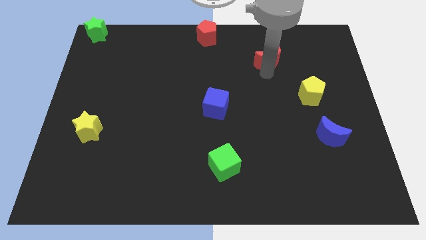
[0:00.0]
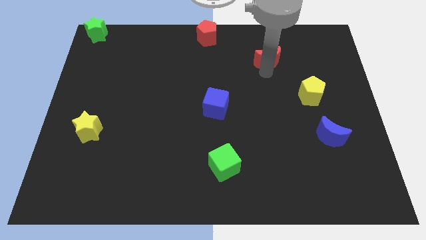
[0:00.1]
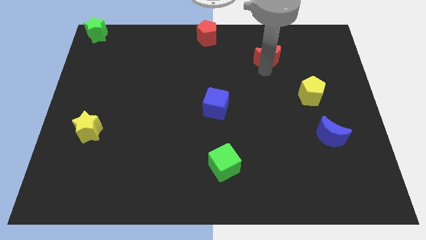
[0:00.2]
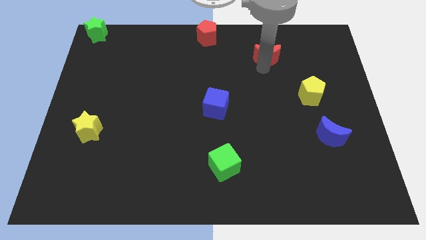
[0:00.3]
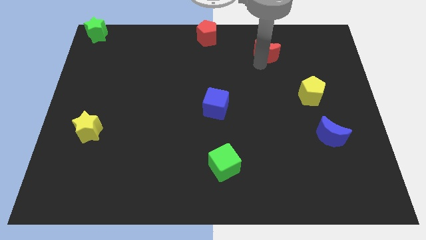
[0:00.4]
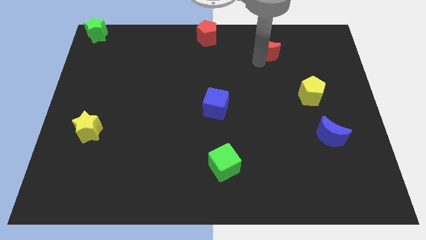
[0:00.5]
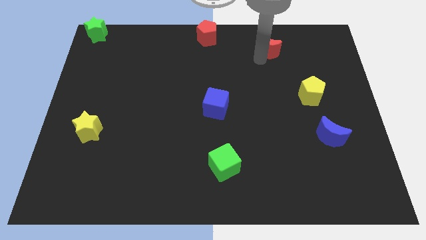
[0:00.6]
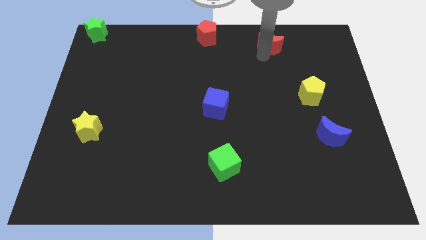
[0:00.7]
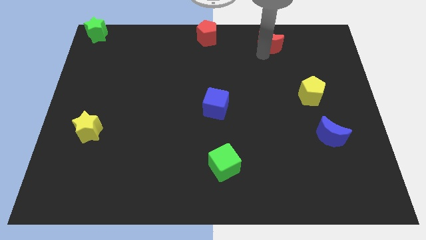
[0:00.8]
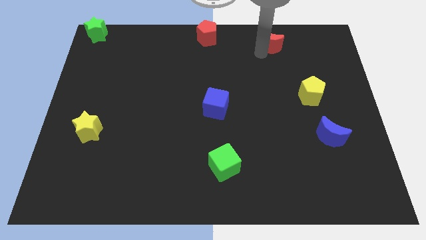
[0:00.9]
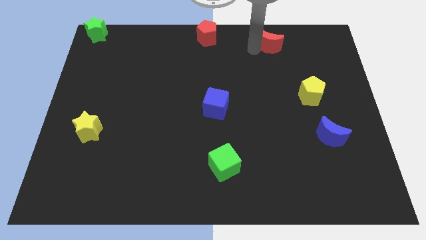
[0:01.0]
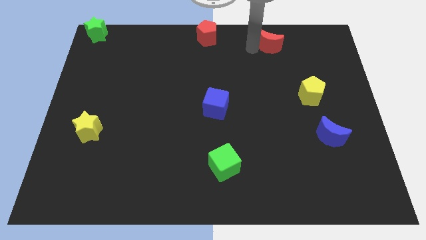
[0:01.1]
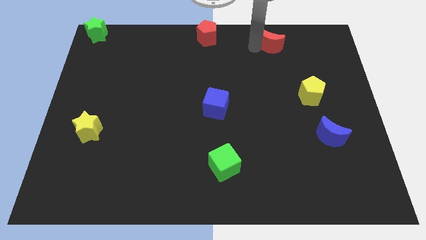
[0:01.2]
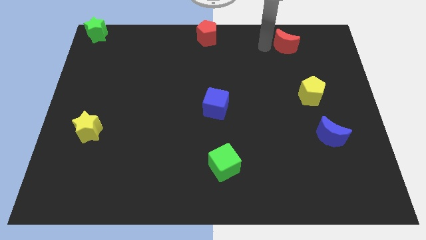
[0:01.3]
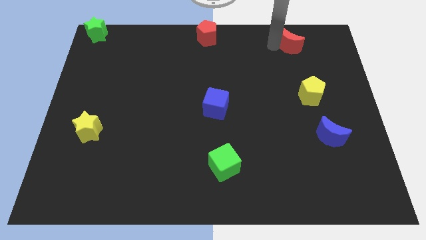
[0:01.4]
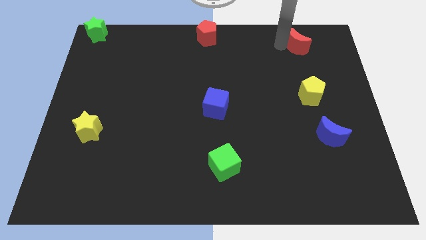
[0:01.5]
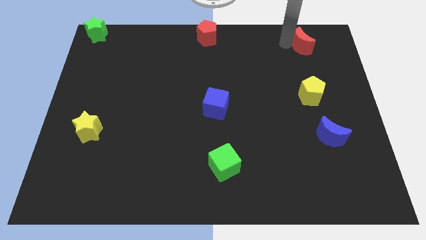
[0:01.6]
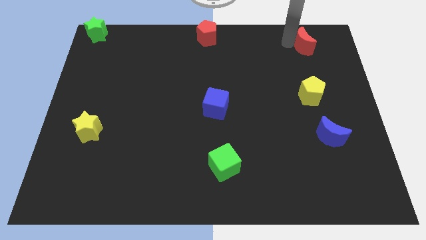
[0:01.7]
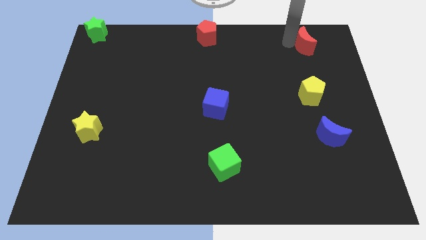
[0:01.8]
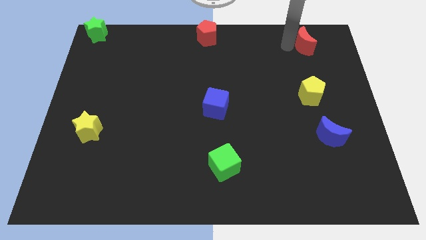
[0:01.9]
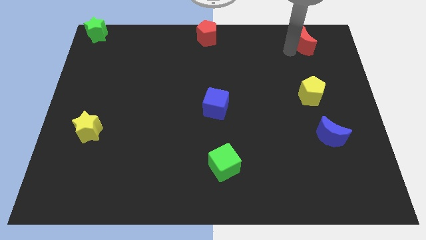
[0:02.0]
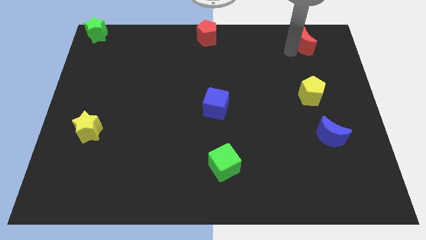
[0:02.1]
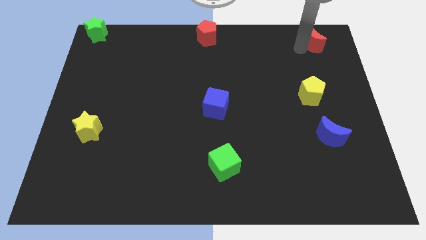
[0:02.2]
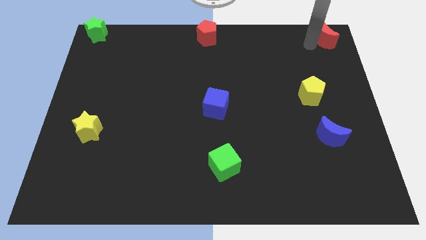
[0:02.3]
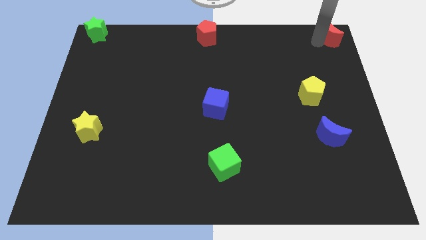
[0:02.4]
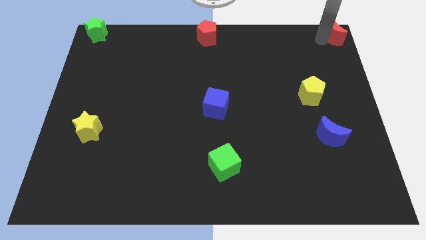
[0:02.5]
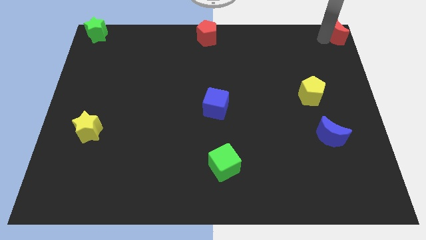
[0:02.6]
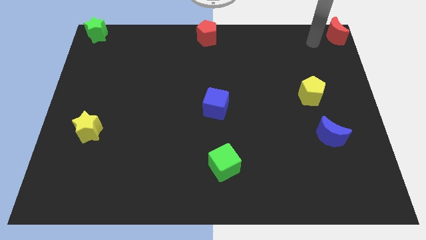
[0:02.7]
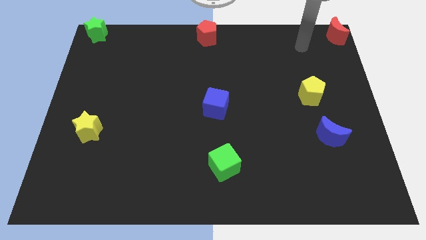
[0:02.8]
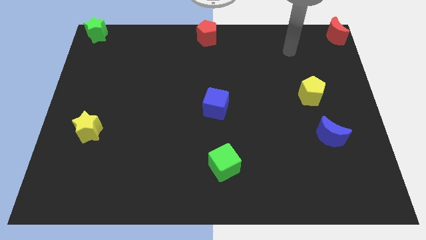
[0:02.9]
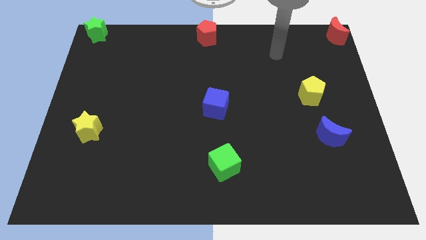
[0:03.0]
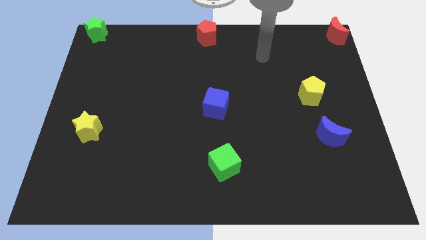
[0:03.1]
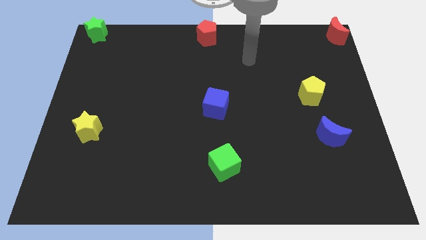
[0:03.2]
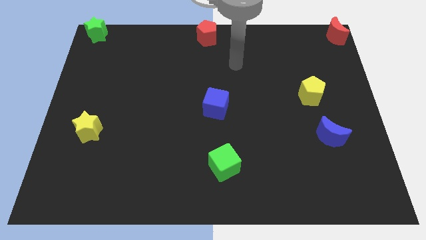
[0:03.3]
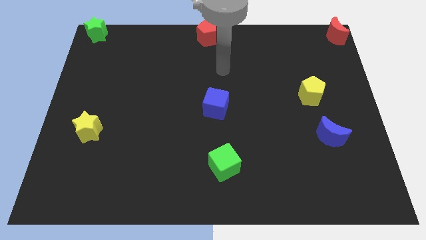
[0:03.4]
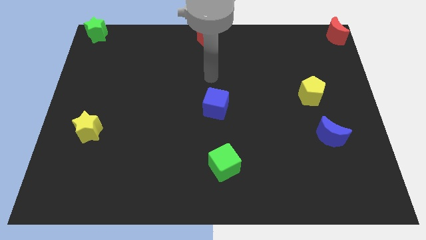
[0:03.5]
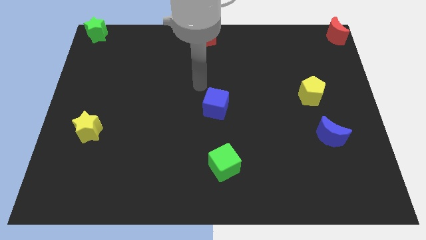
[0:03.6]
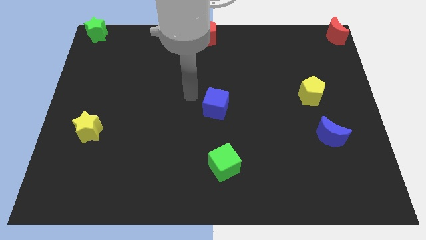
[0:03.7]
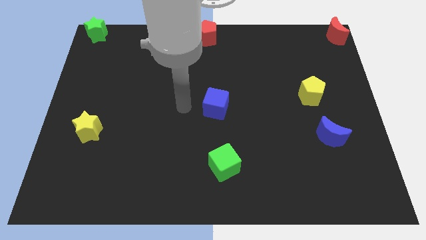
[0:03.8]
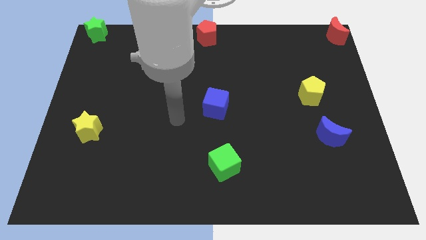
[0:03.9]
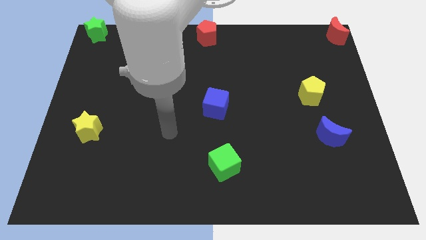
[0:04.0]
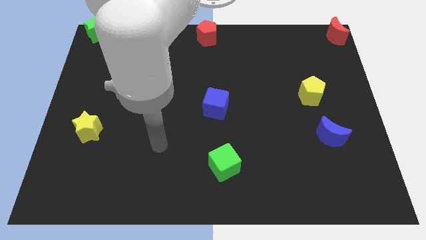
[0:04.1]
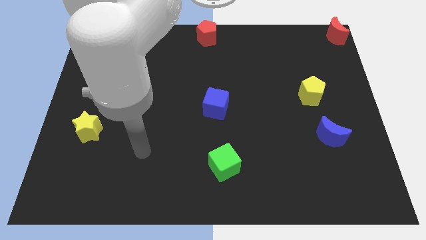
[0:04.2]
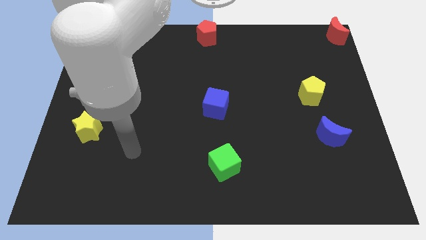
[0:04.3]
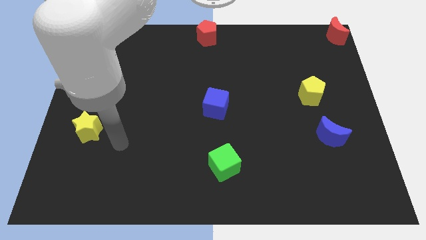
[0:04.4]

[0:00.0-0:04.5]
move red moon to the top right corner

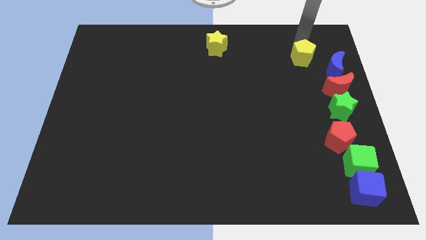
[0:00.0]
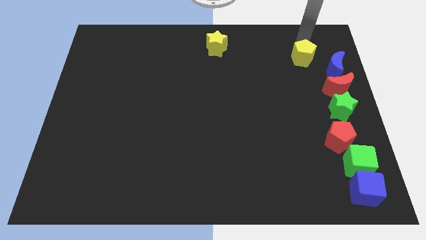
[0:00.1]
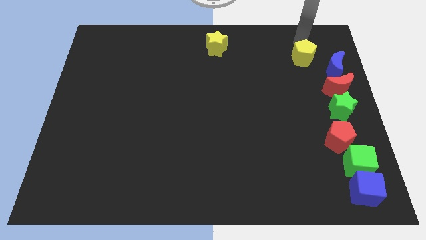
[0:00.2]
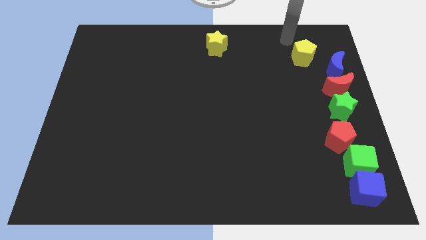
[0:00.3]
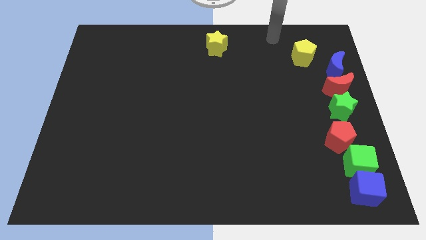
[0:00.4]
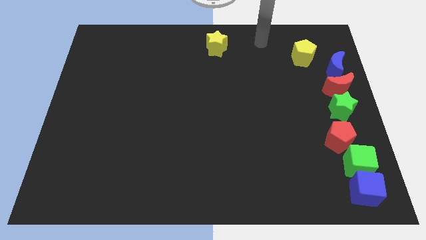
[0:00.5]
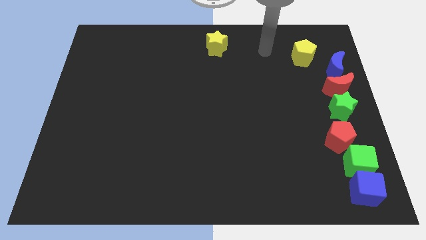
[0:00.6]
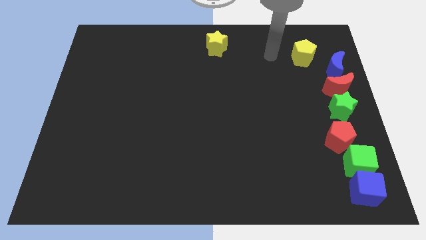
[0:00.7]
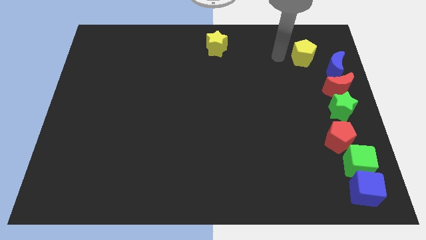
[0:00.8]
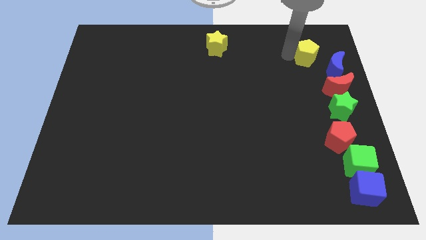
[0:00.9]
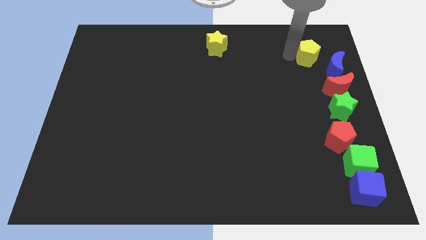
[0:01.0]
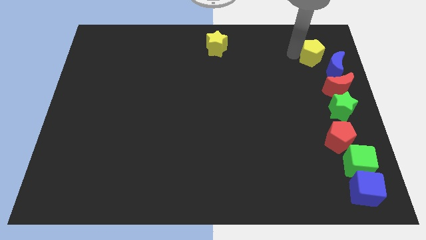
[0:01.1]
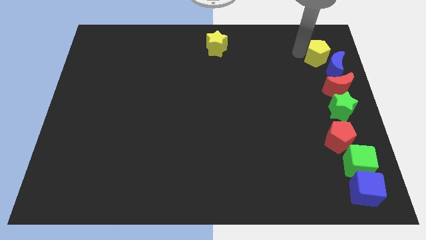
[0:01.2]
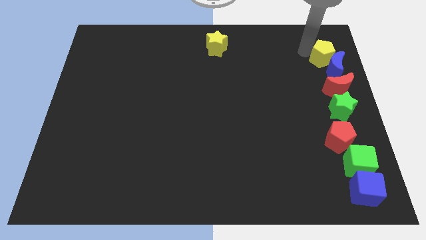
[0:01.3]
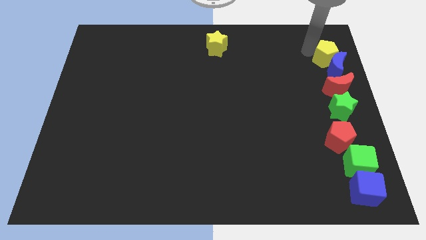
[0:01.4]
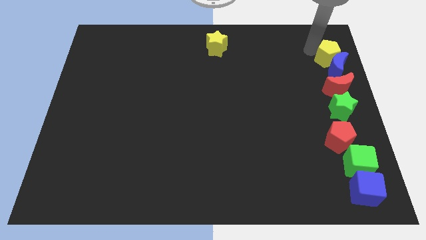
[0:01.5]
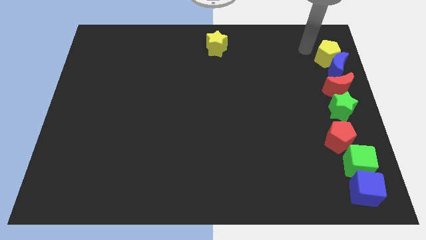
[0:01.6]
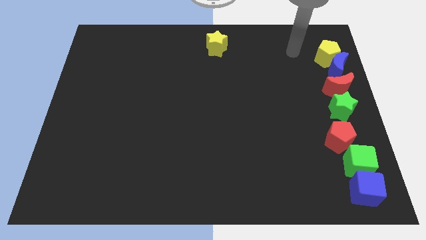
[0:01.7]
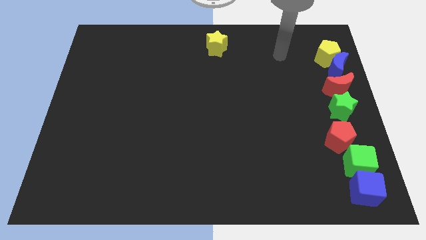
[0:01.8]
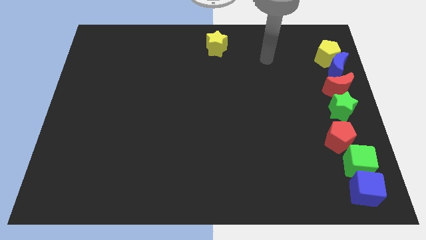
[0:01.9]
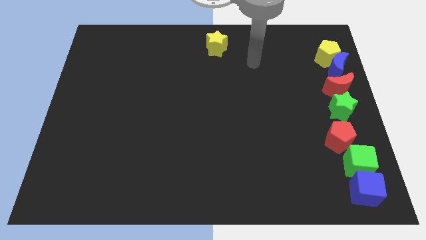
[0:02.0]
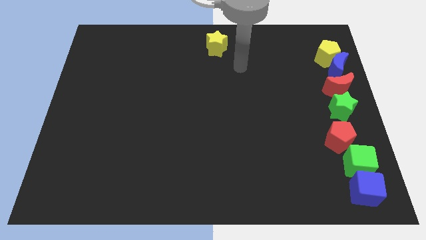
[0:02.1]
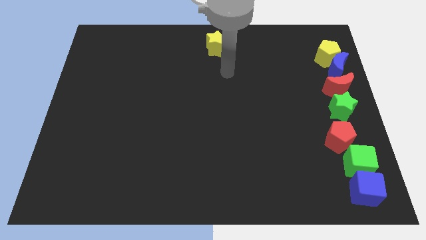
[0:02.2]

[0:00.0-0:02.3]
place the yellow pentagon above the blue moon to form a vertical line

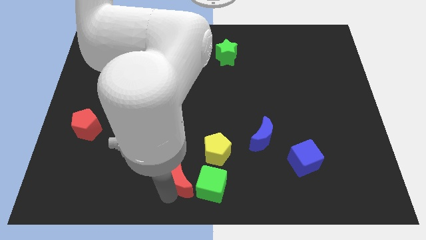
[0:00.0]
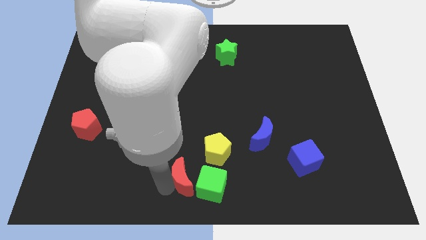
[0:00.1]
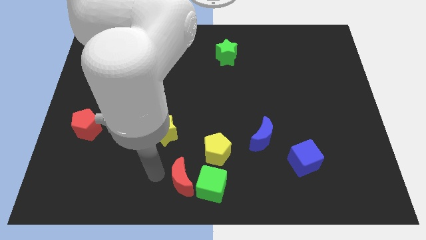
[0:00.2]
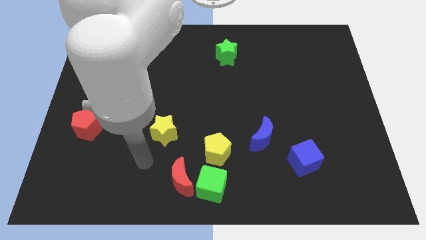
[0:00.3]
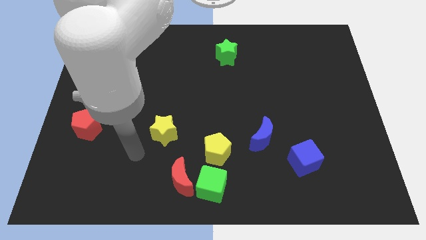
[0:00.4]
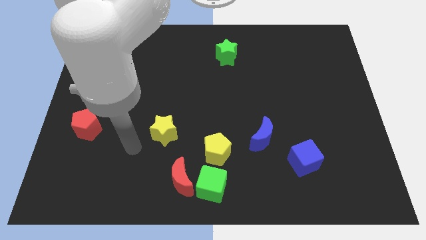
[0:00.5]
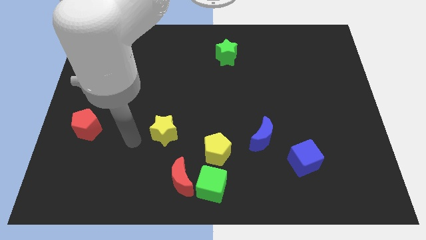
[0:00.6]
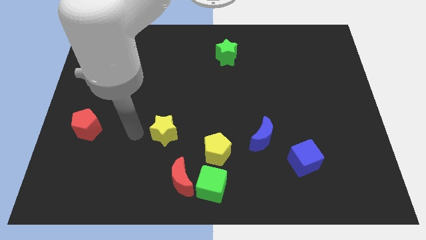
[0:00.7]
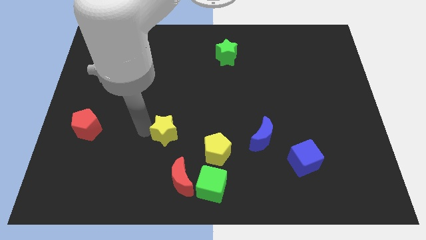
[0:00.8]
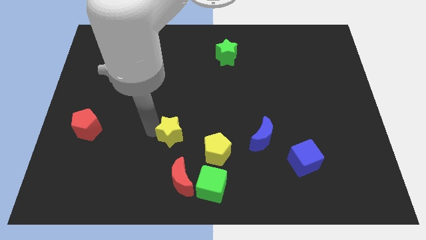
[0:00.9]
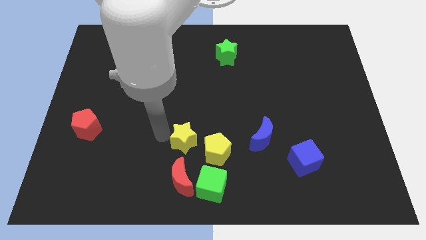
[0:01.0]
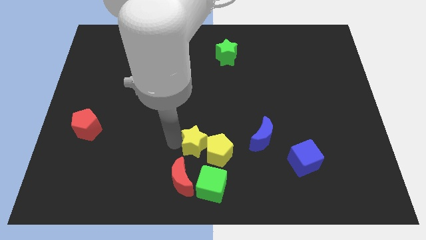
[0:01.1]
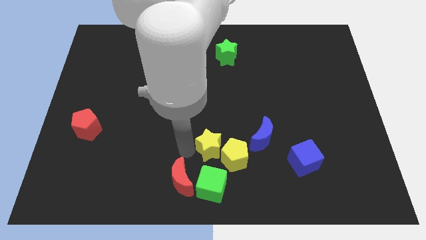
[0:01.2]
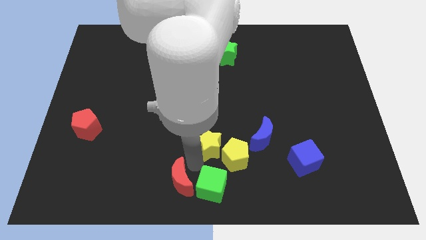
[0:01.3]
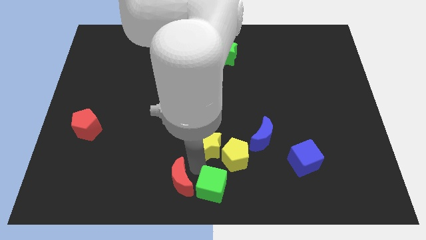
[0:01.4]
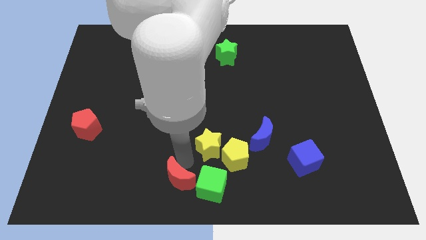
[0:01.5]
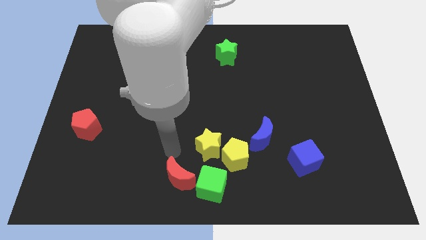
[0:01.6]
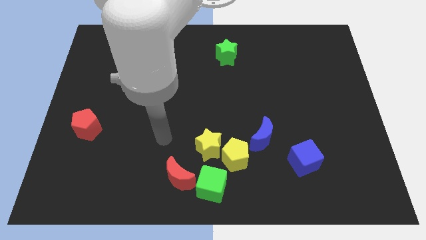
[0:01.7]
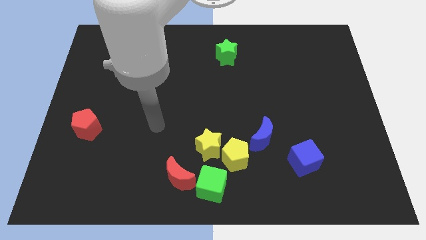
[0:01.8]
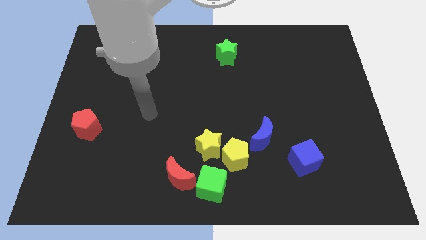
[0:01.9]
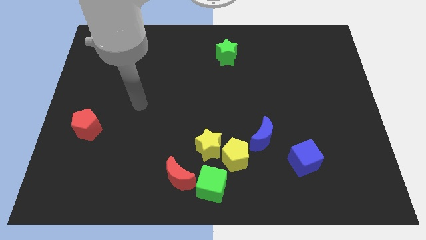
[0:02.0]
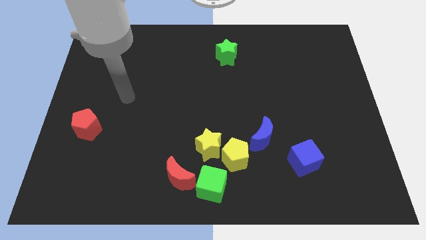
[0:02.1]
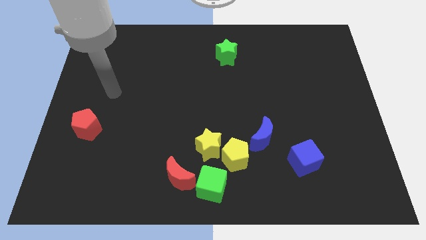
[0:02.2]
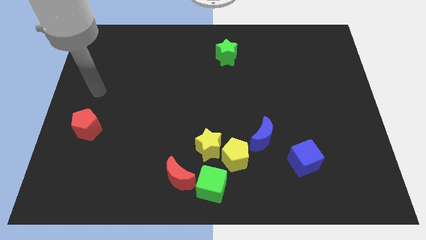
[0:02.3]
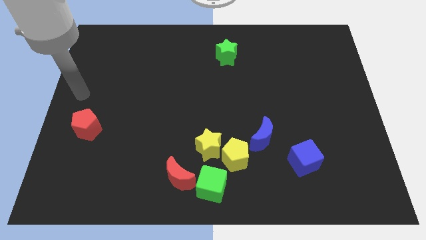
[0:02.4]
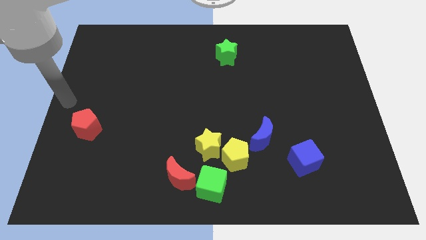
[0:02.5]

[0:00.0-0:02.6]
move yellow star into yellow pentagon
